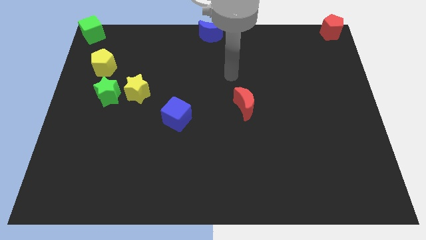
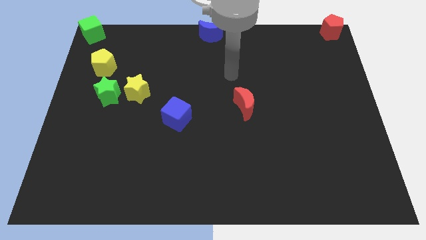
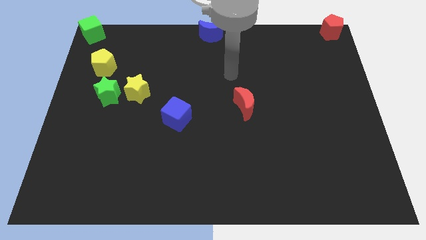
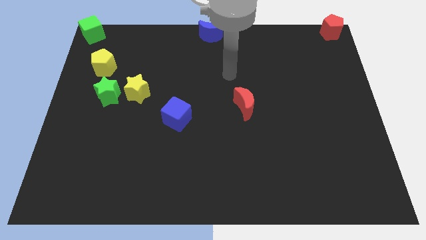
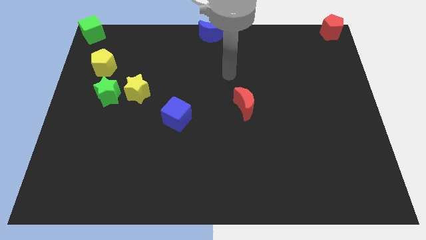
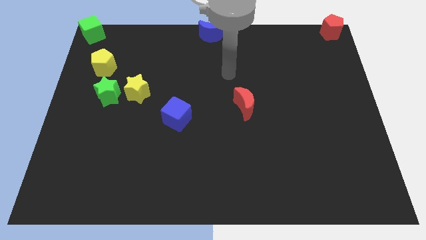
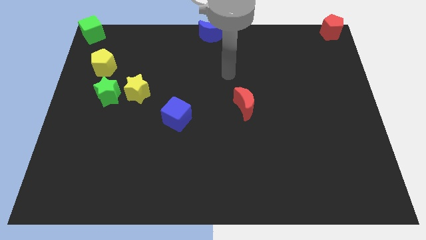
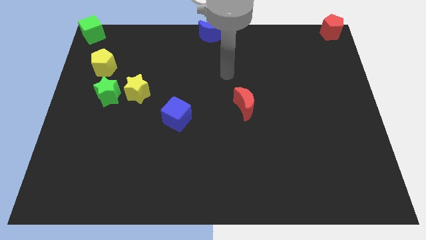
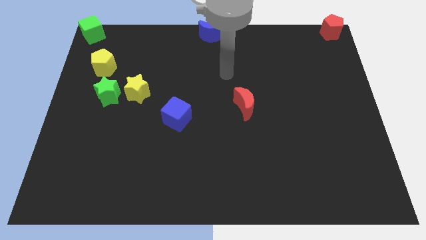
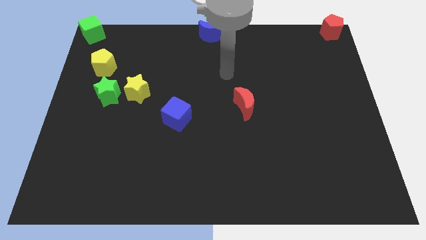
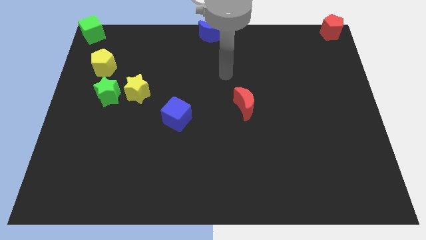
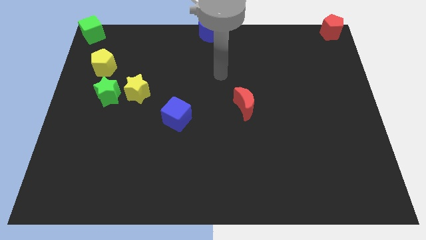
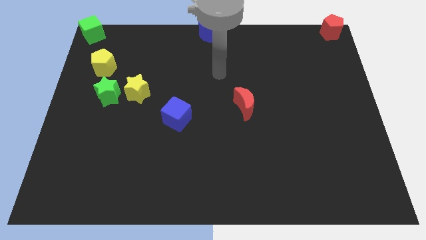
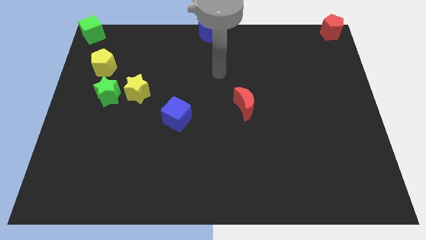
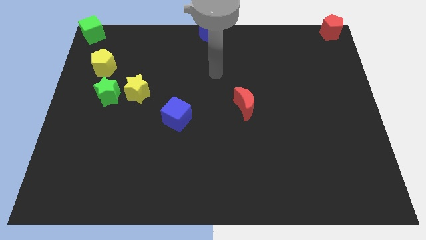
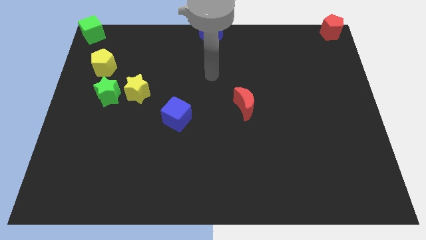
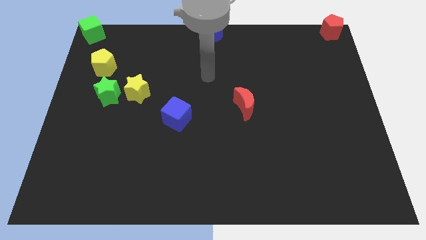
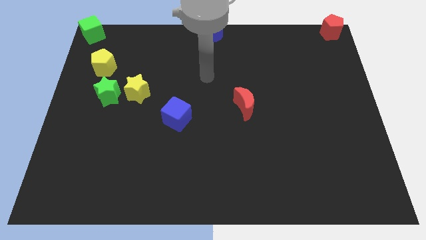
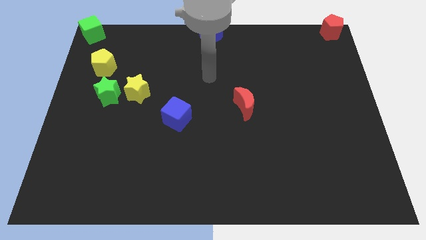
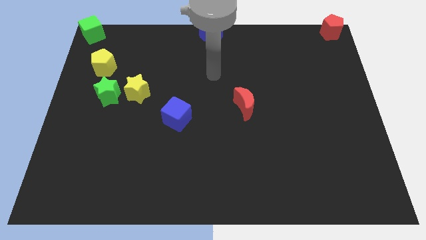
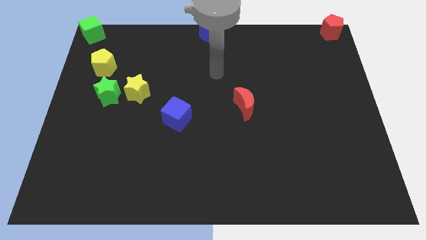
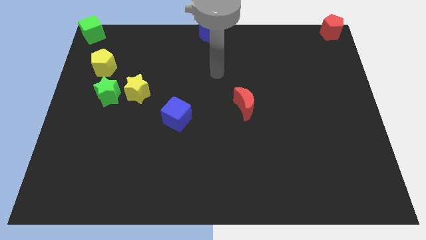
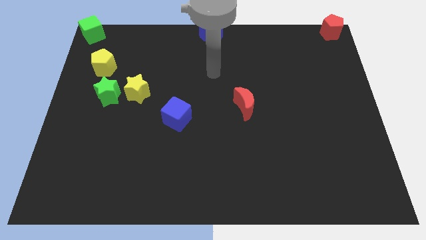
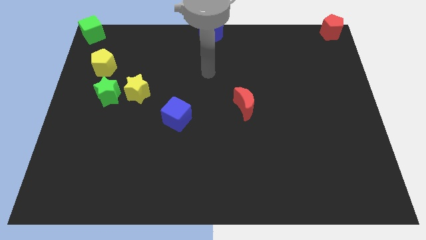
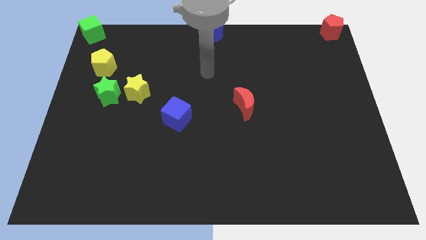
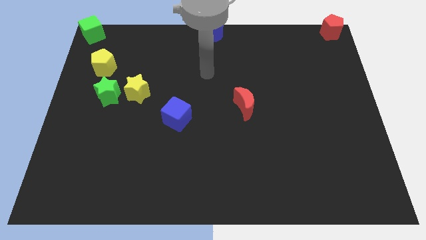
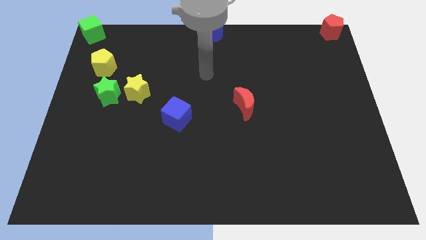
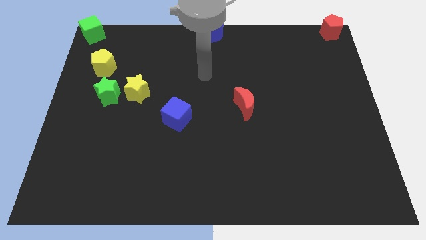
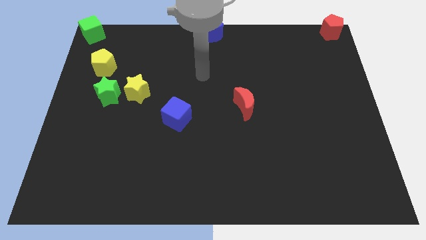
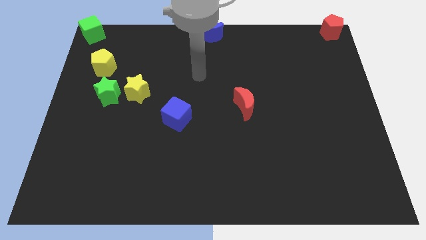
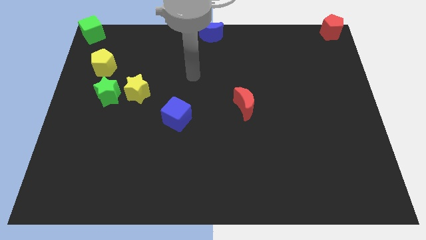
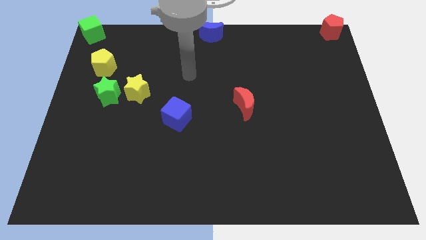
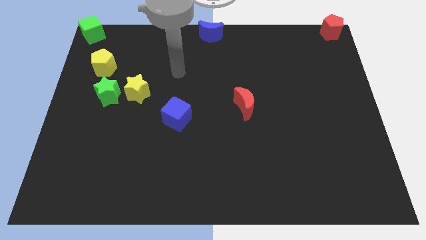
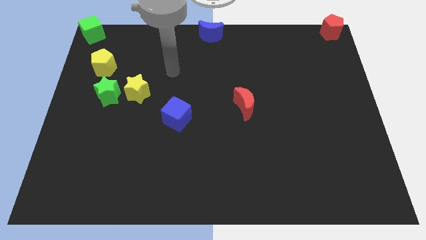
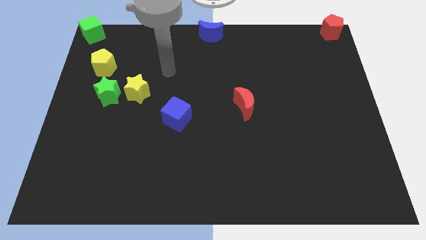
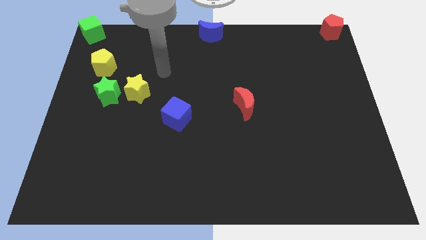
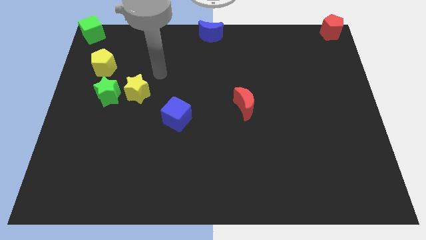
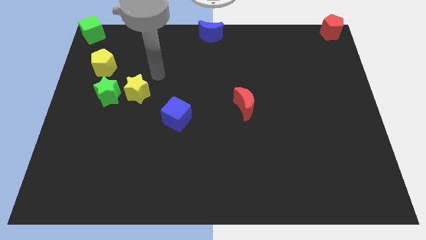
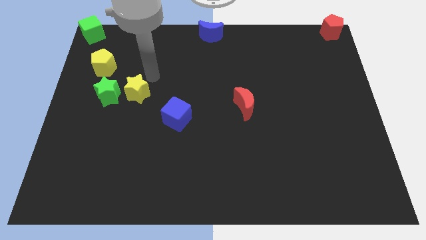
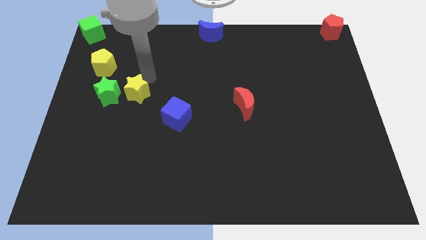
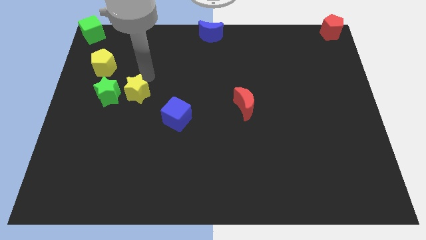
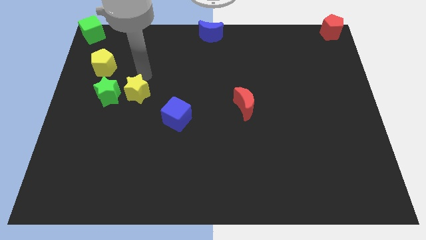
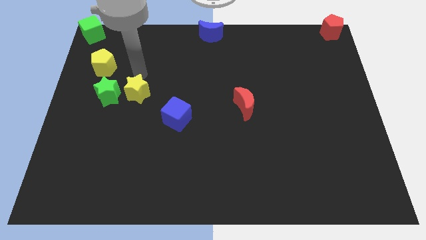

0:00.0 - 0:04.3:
move your arm towards the yellow star

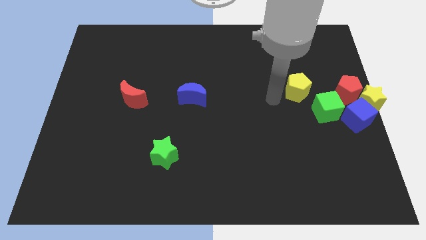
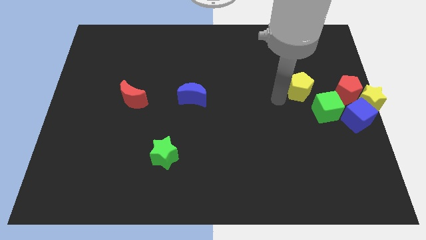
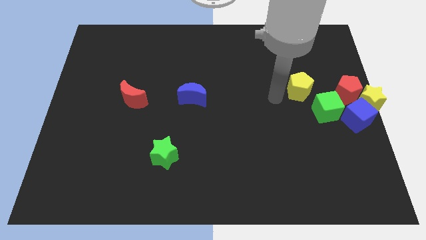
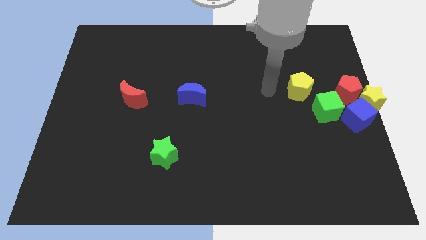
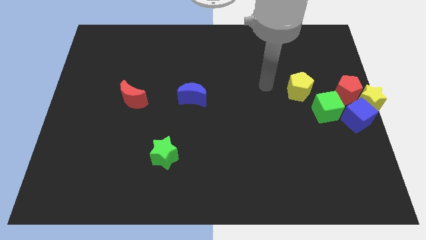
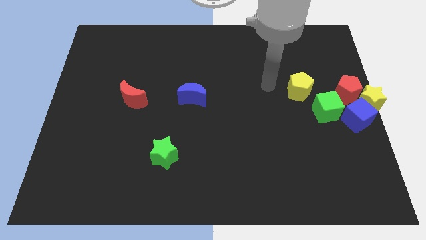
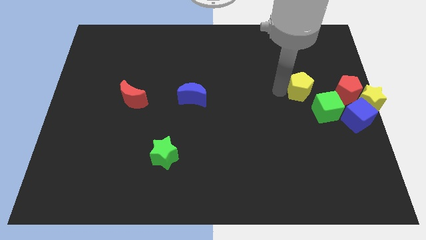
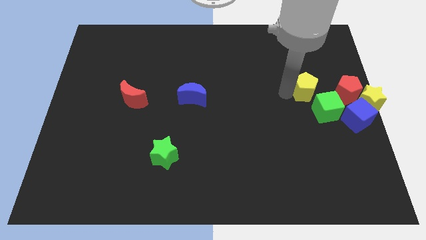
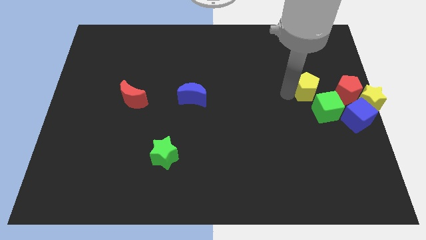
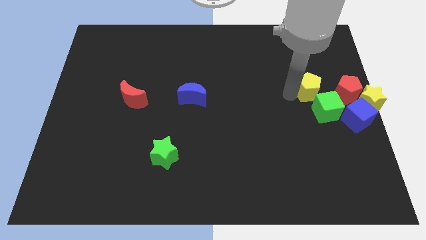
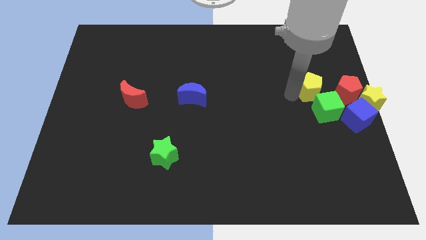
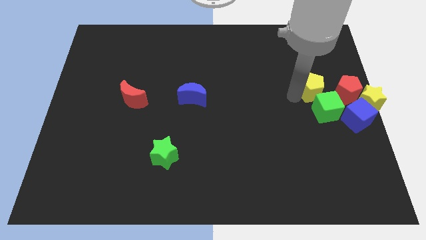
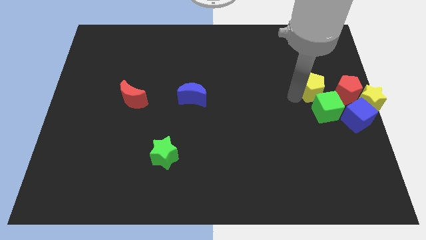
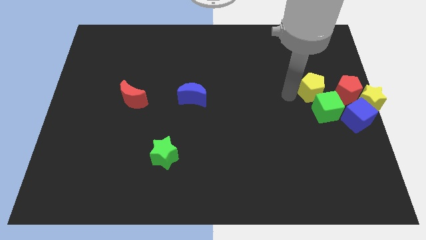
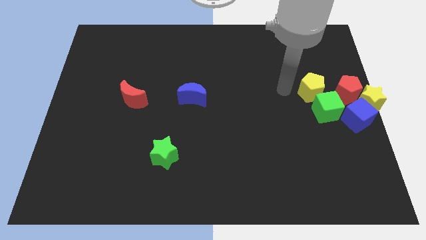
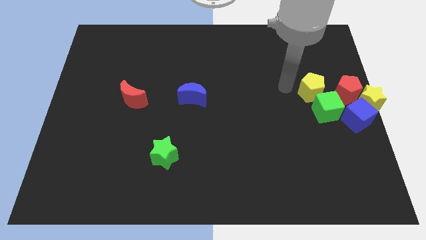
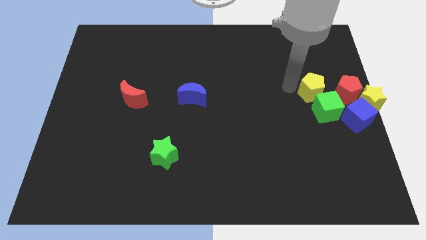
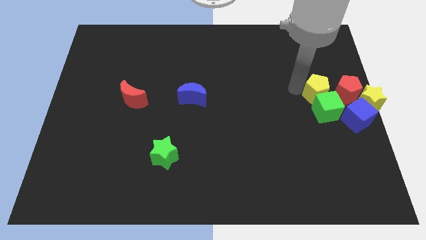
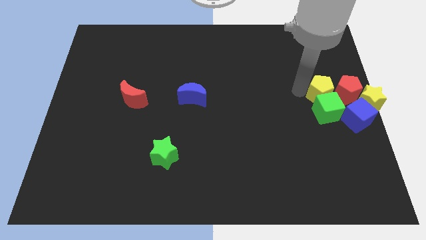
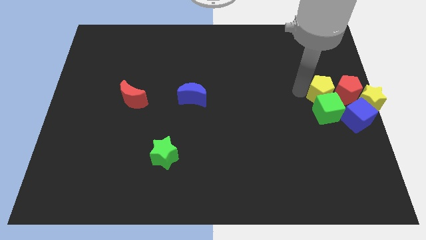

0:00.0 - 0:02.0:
push the yellow pentagon into the green cube

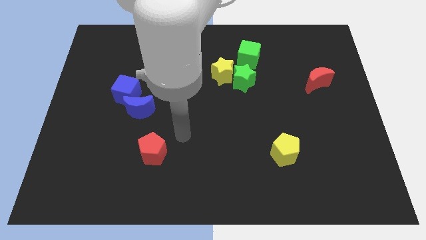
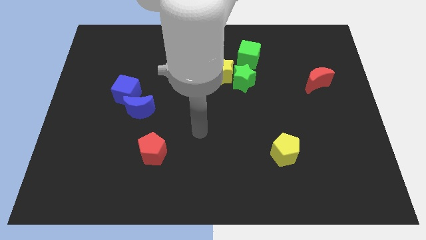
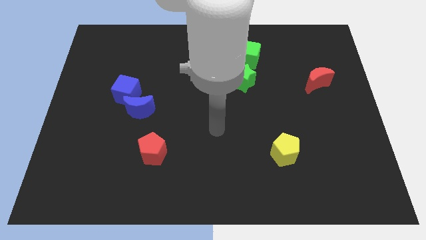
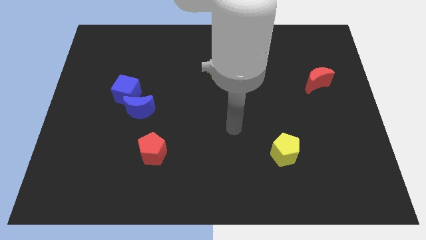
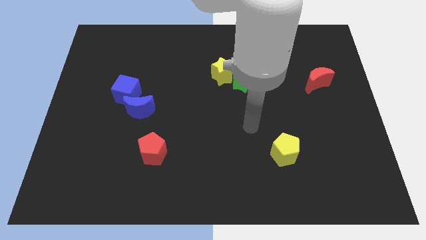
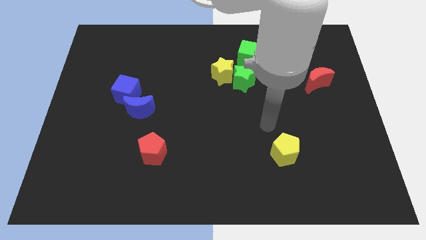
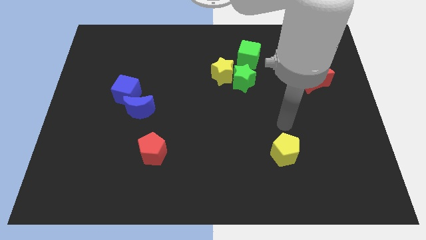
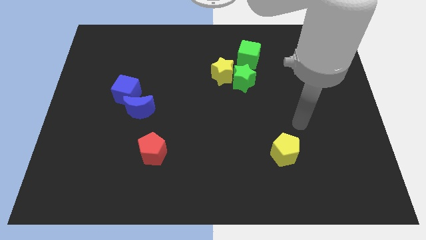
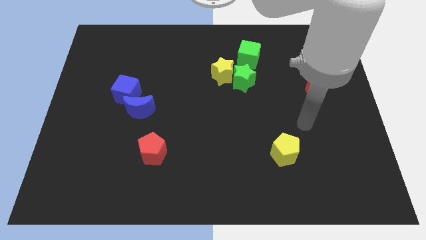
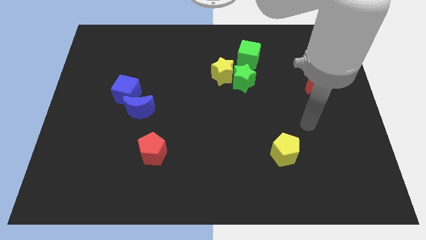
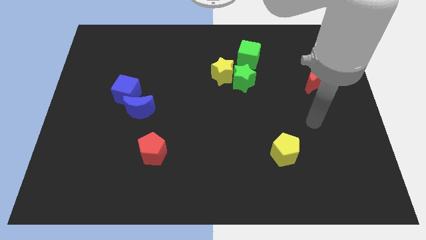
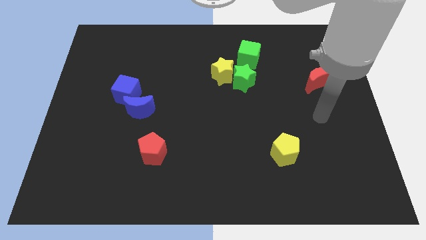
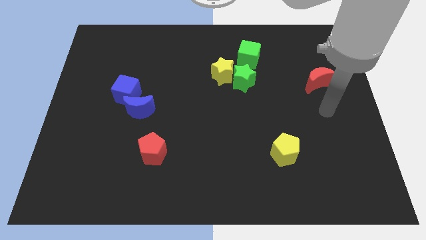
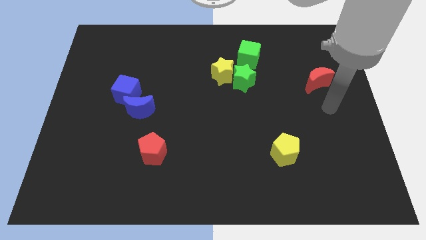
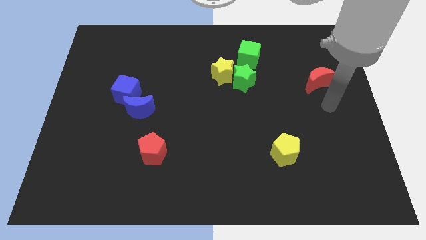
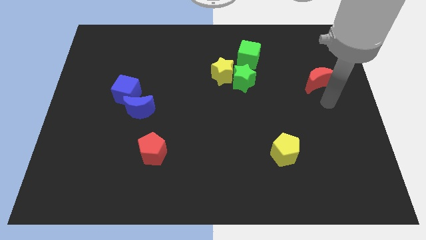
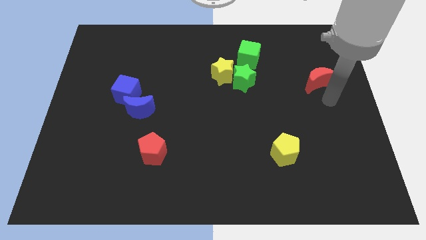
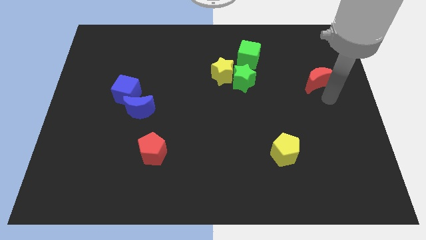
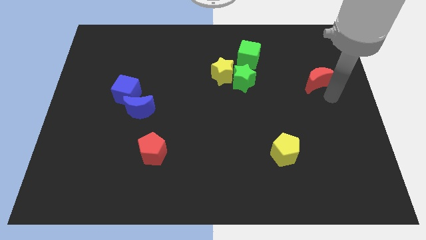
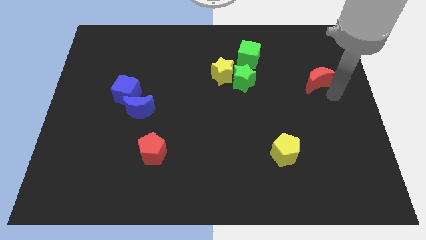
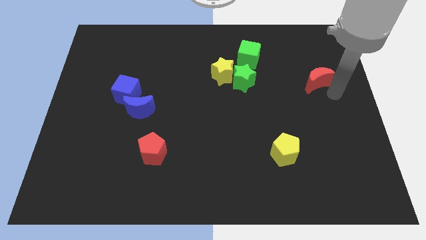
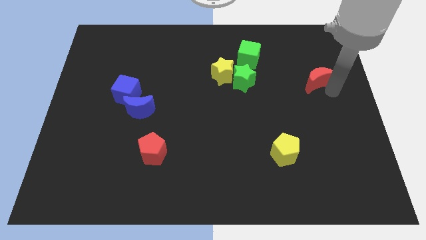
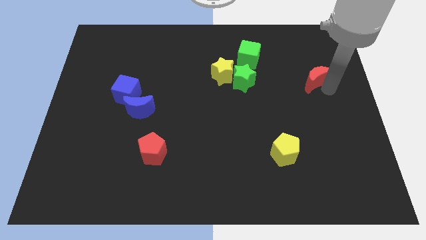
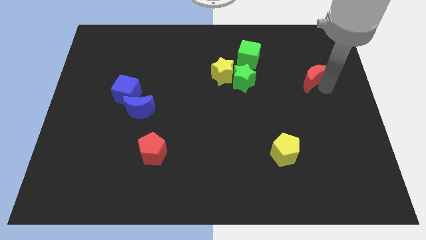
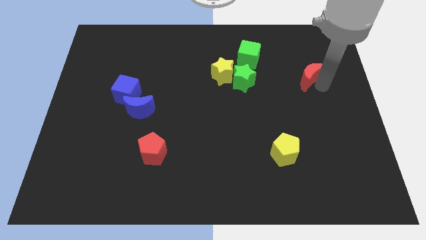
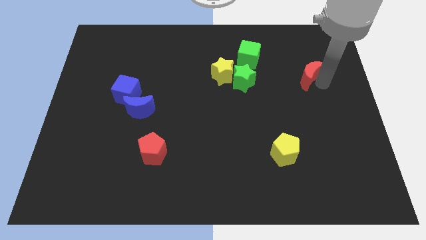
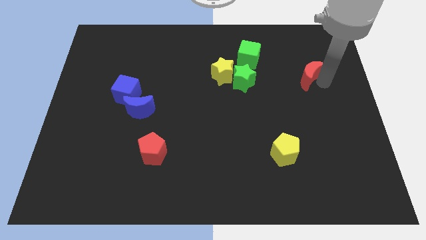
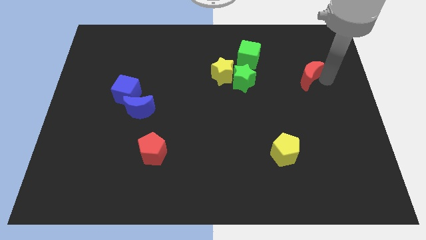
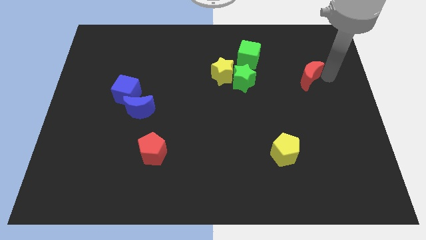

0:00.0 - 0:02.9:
push the red crescent towards the top of the board
